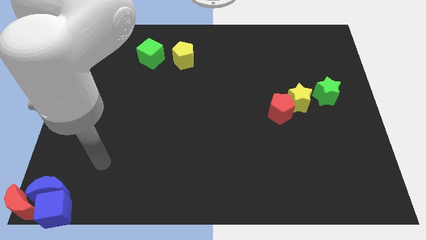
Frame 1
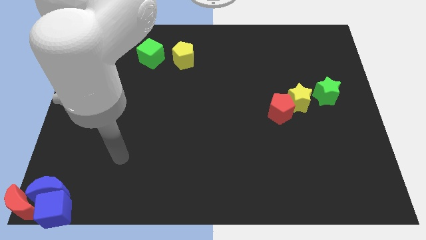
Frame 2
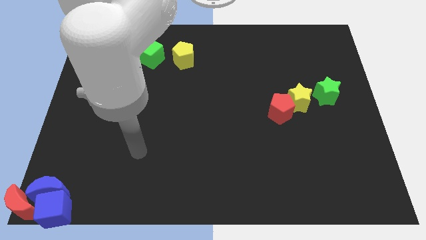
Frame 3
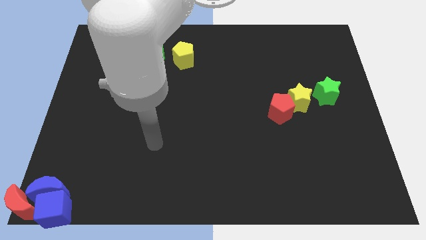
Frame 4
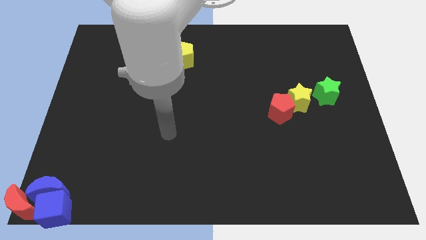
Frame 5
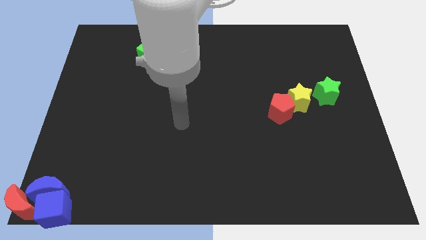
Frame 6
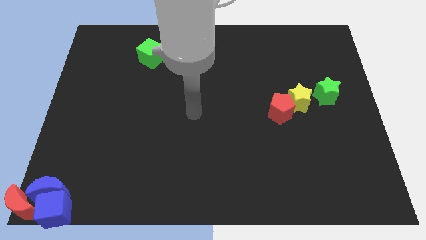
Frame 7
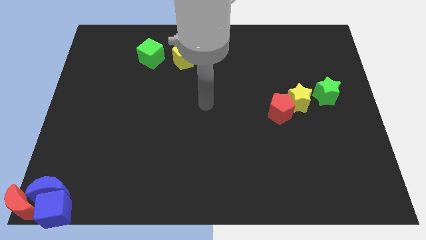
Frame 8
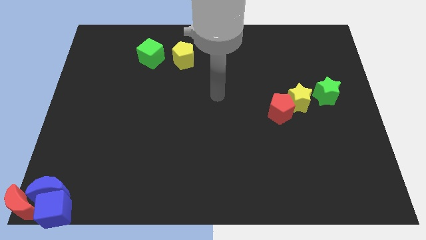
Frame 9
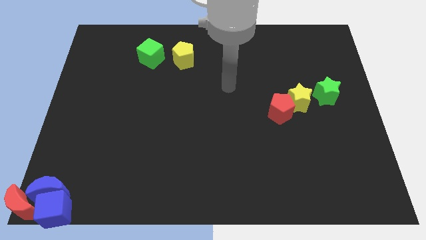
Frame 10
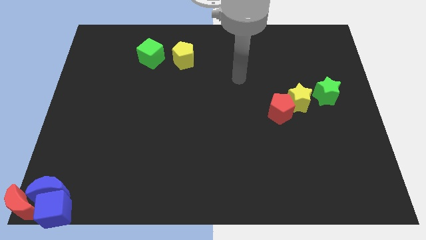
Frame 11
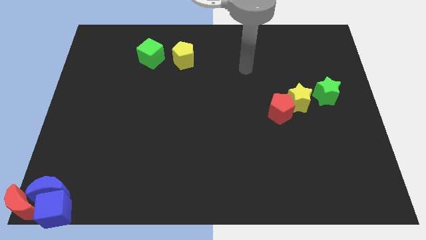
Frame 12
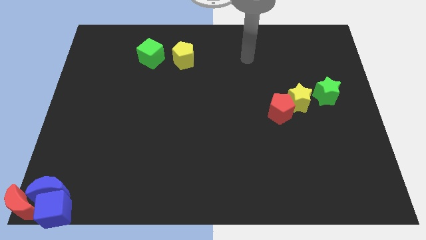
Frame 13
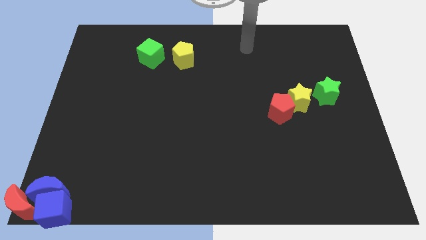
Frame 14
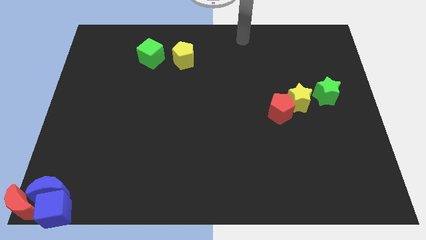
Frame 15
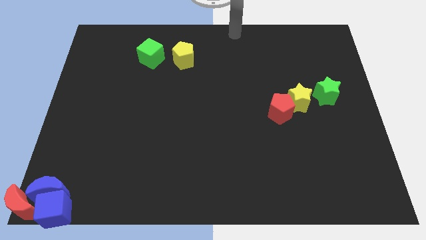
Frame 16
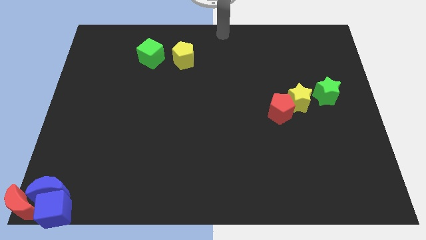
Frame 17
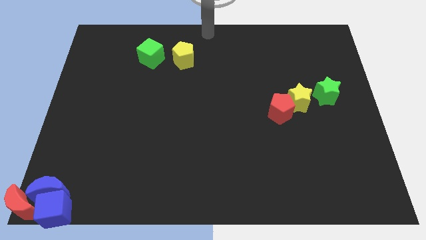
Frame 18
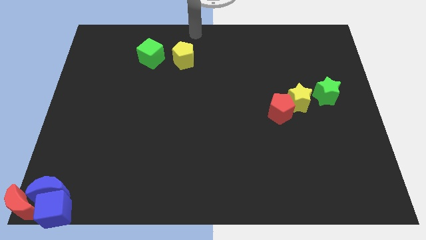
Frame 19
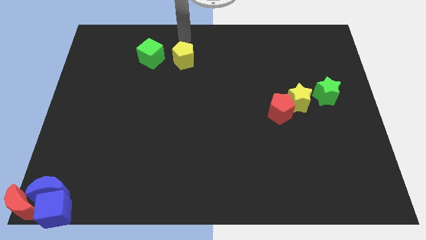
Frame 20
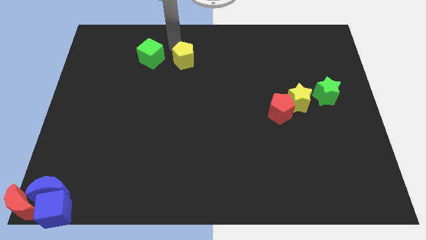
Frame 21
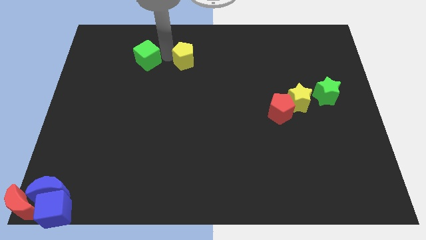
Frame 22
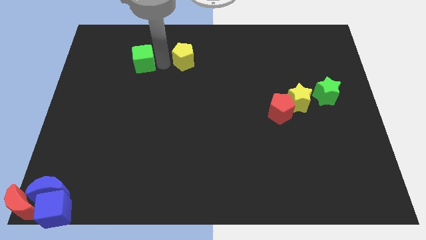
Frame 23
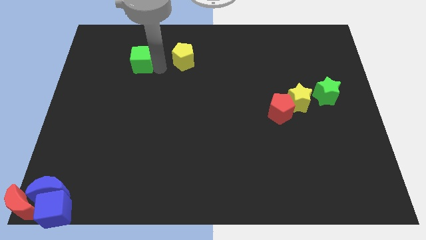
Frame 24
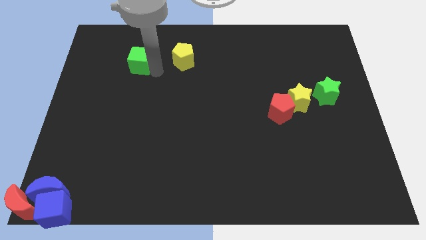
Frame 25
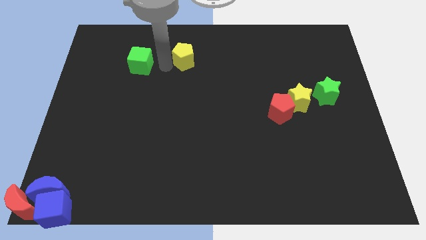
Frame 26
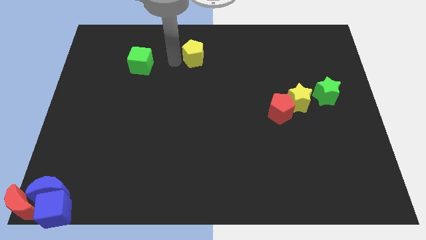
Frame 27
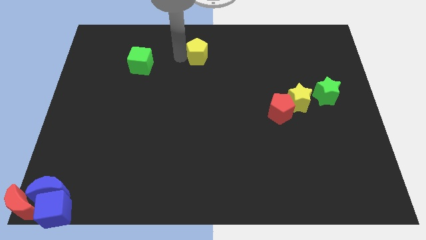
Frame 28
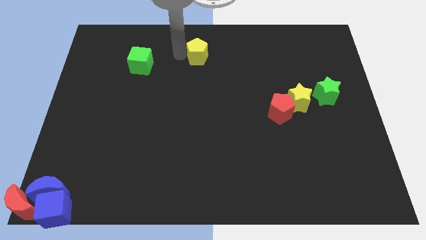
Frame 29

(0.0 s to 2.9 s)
separate the green cube and yellow pentagon to each other

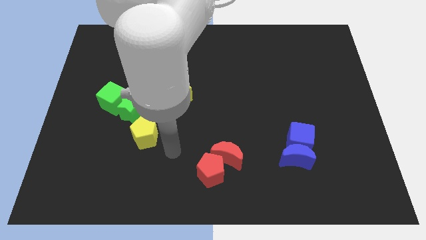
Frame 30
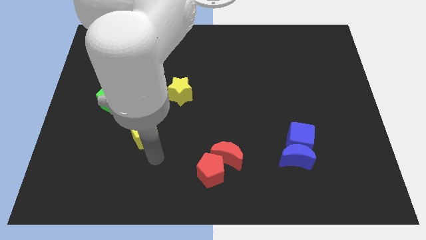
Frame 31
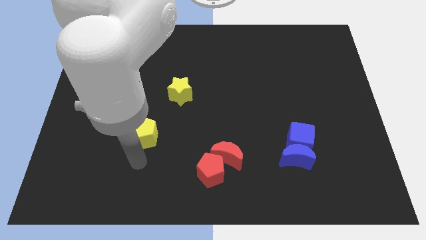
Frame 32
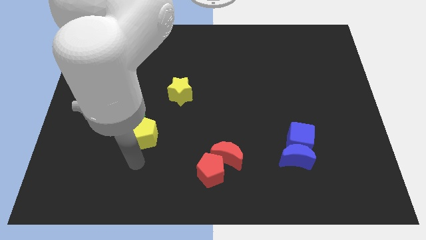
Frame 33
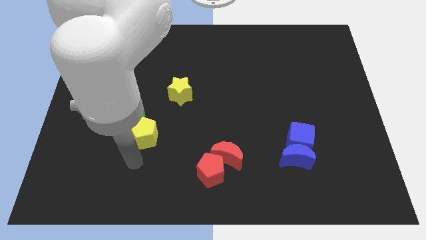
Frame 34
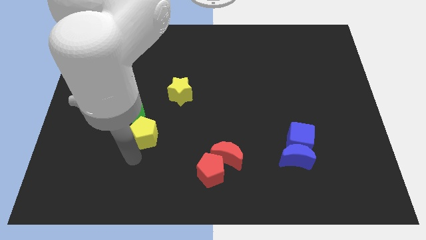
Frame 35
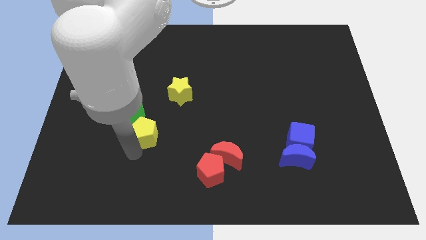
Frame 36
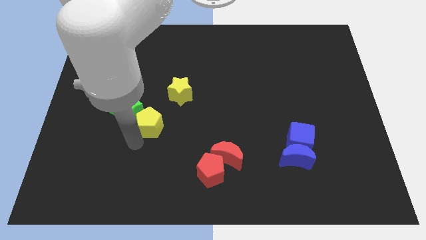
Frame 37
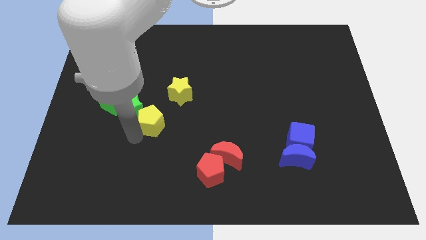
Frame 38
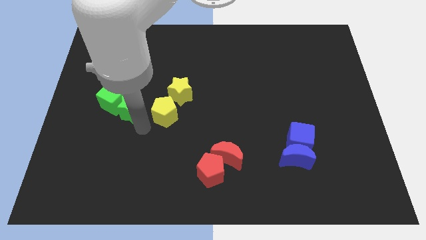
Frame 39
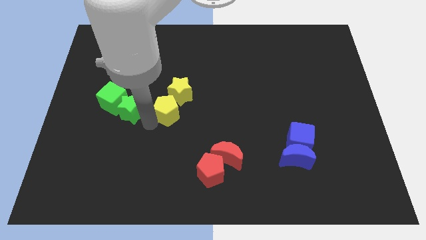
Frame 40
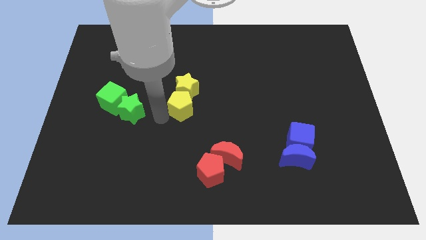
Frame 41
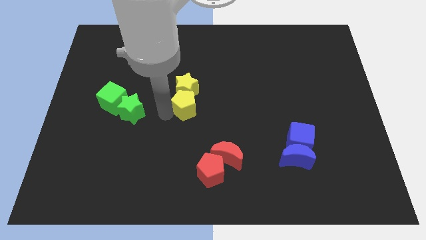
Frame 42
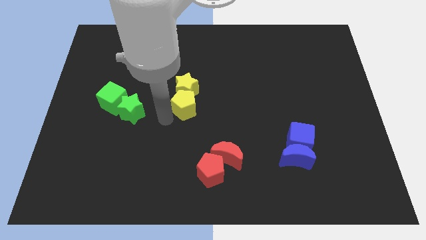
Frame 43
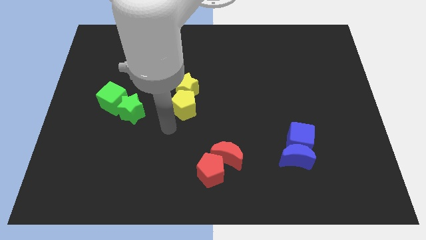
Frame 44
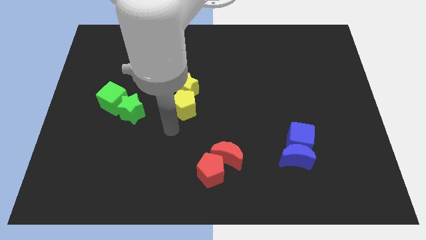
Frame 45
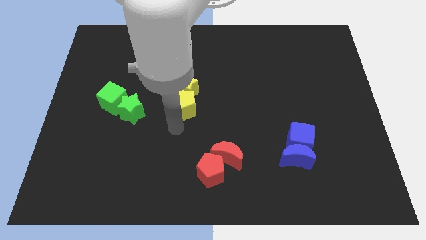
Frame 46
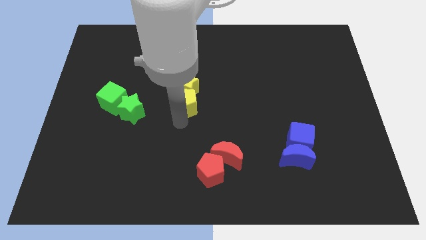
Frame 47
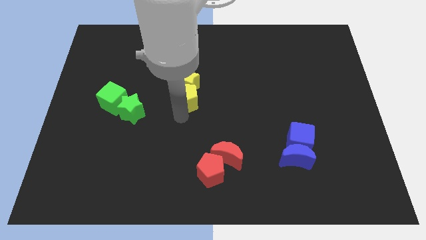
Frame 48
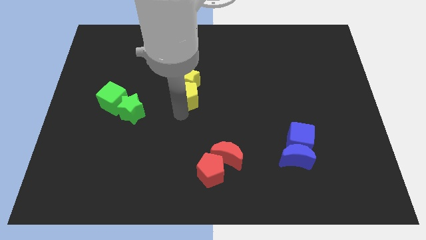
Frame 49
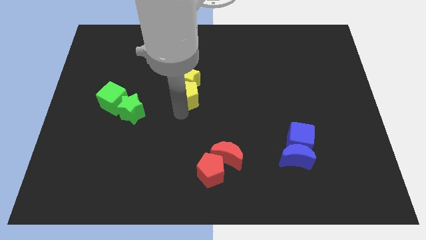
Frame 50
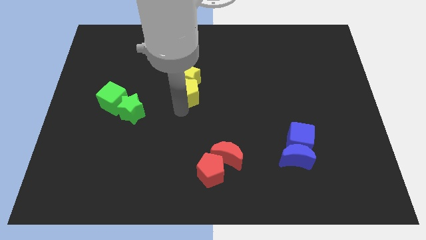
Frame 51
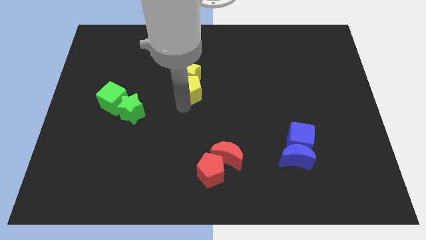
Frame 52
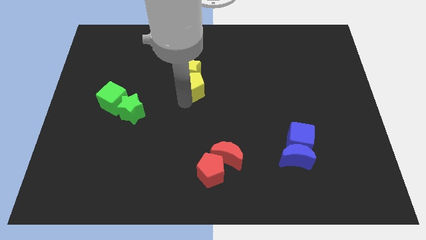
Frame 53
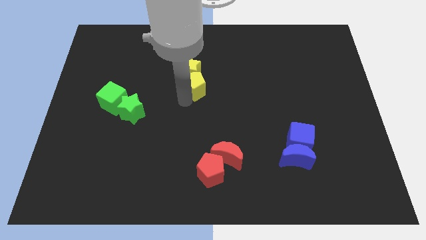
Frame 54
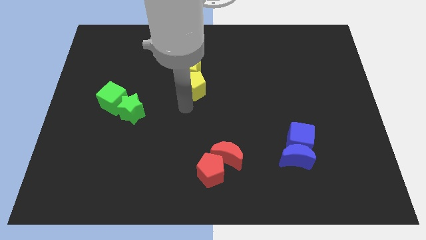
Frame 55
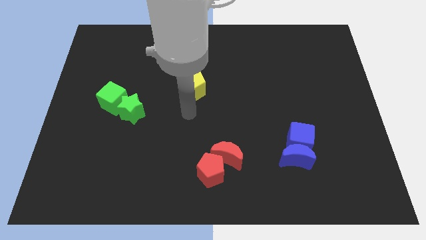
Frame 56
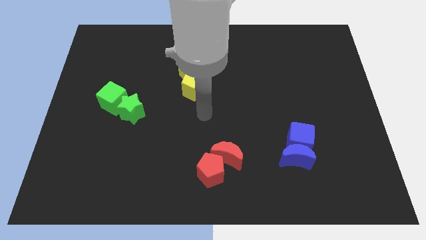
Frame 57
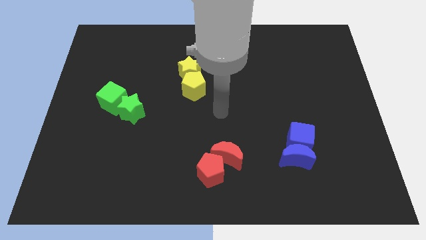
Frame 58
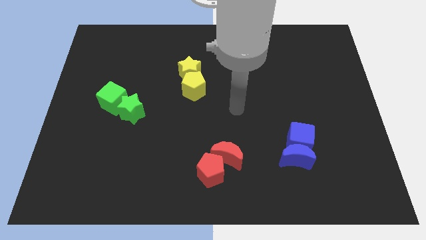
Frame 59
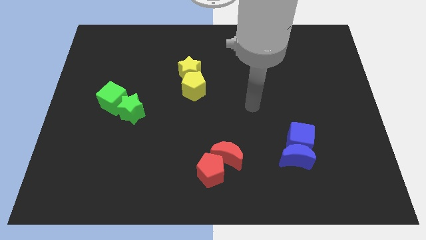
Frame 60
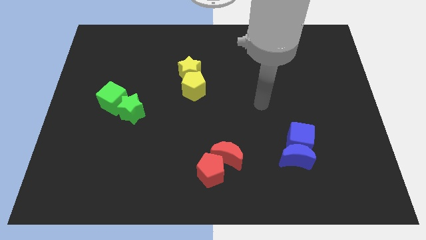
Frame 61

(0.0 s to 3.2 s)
slightly push yellow blocks towards up

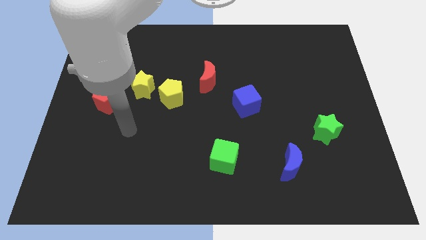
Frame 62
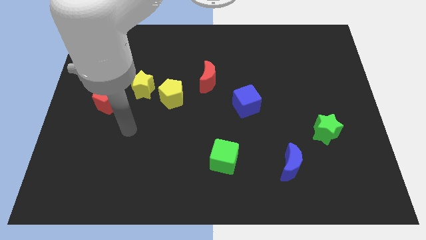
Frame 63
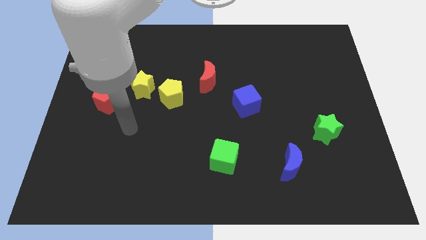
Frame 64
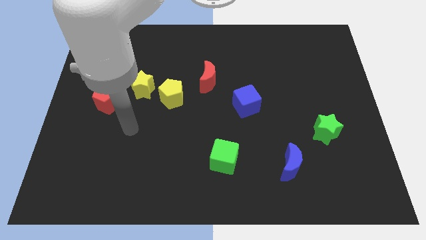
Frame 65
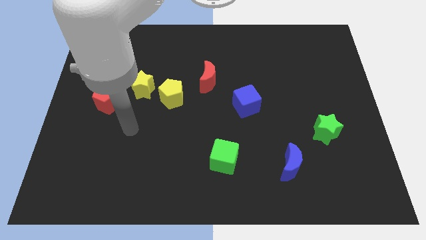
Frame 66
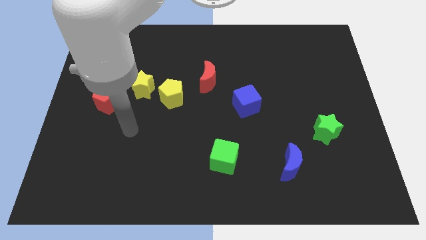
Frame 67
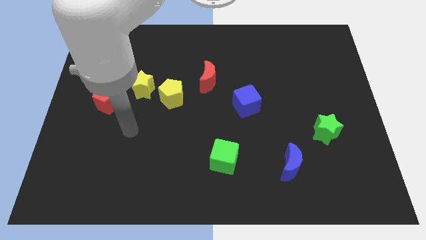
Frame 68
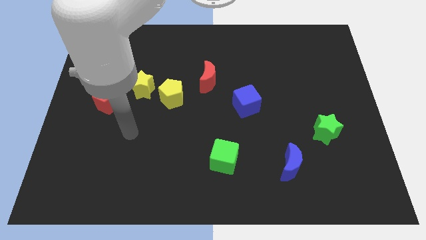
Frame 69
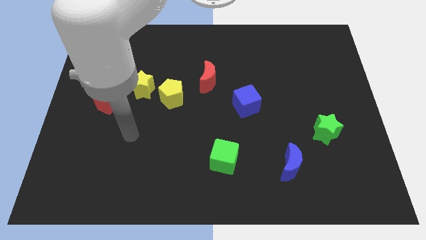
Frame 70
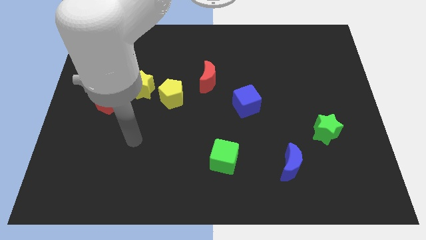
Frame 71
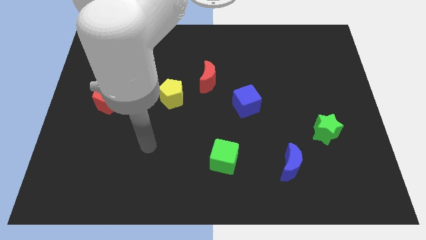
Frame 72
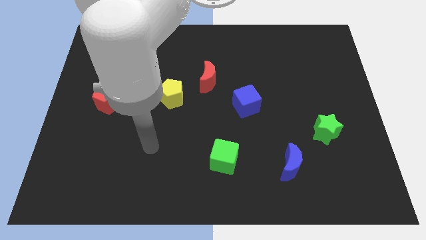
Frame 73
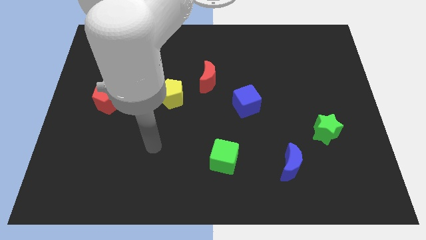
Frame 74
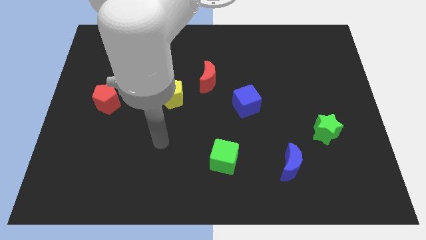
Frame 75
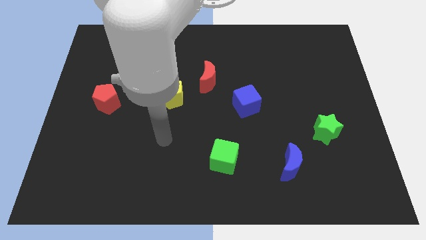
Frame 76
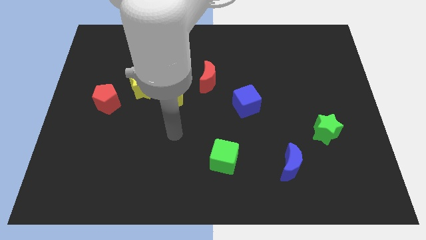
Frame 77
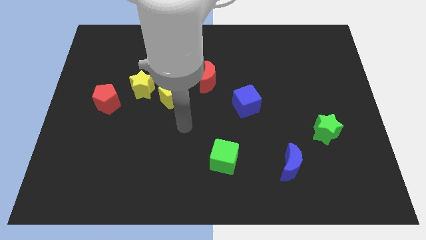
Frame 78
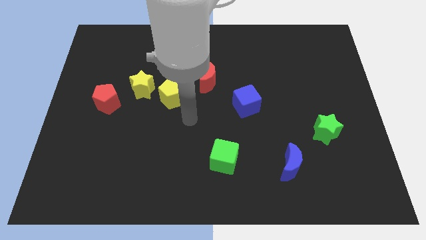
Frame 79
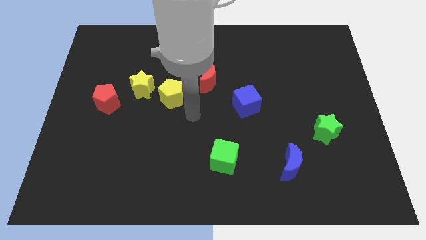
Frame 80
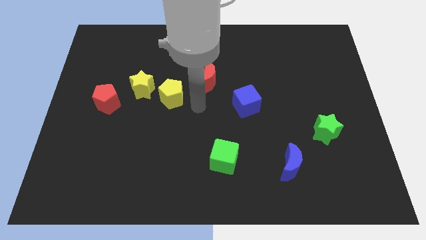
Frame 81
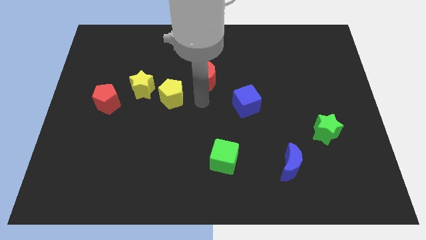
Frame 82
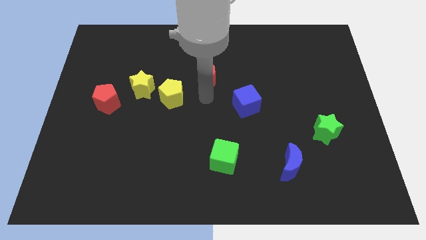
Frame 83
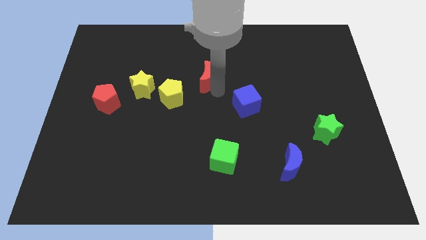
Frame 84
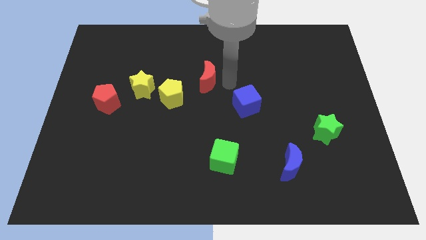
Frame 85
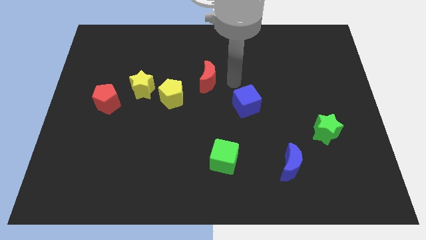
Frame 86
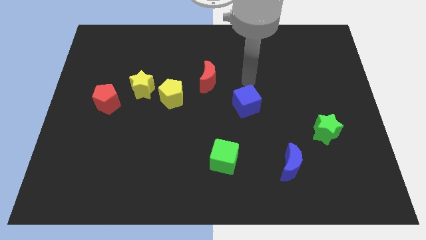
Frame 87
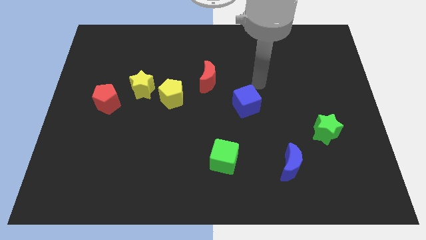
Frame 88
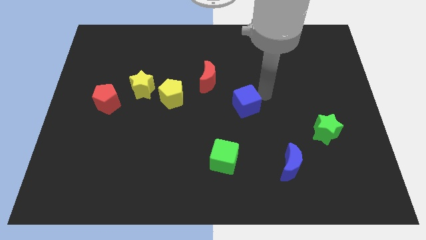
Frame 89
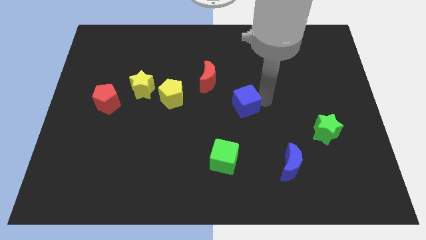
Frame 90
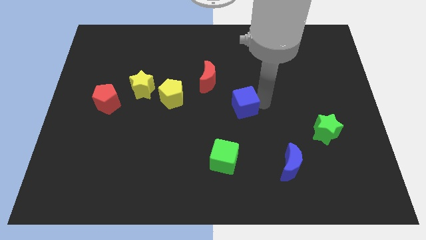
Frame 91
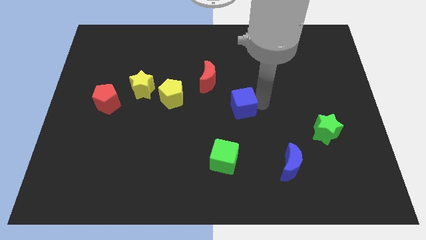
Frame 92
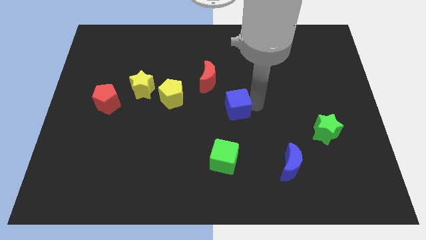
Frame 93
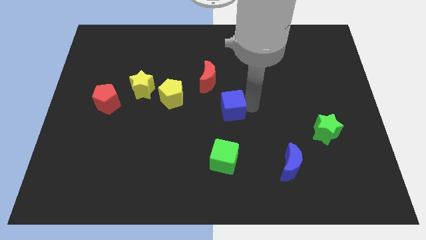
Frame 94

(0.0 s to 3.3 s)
place the arm right to the blue cube
